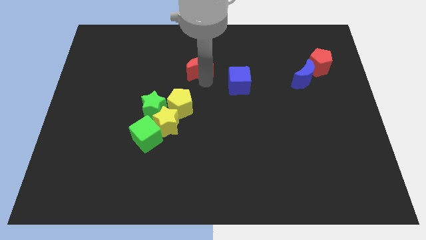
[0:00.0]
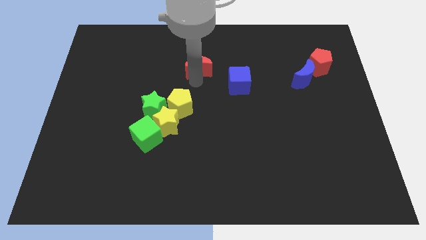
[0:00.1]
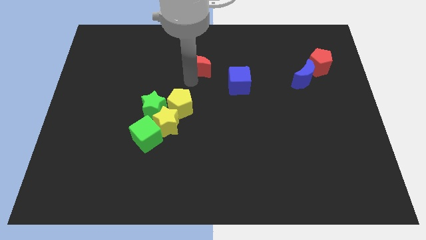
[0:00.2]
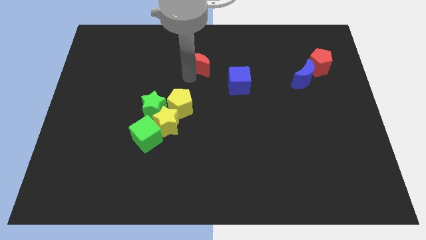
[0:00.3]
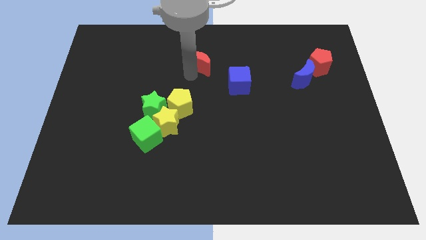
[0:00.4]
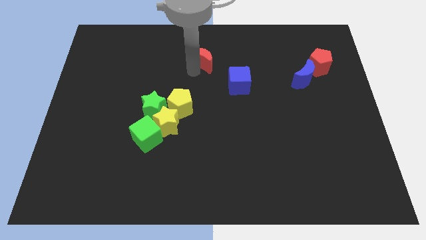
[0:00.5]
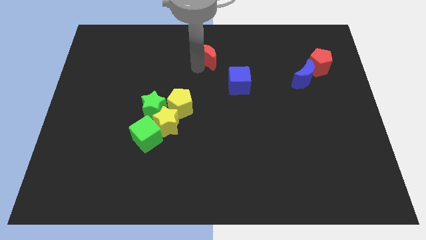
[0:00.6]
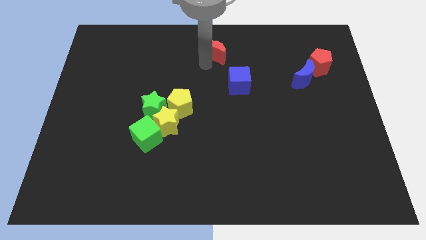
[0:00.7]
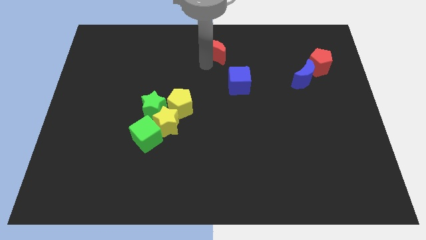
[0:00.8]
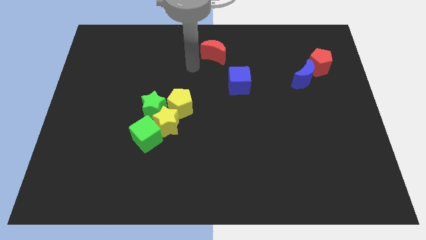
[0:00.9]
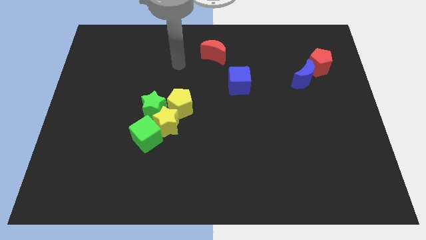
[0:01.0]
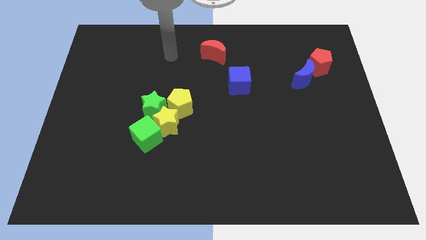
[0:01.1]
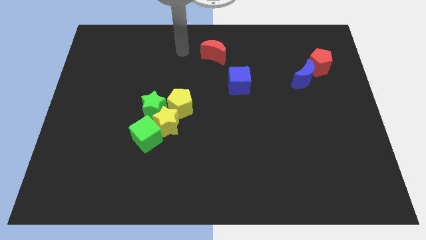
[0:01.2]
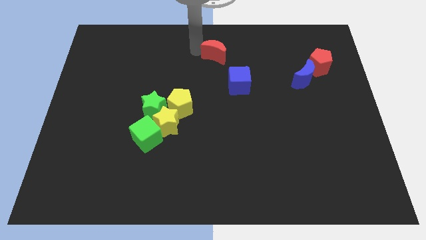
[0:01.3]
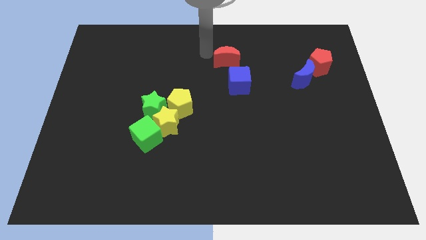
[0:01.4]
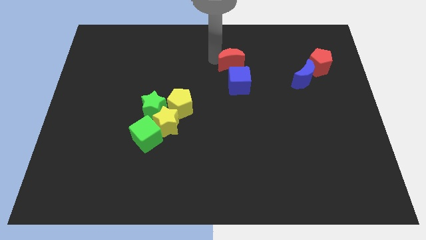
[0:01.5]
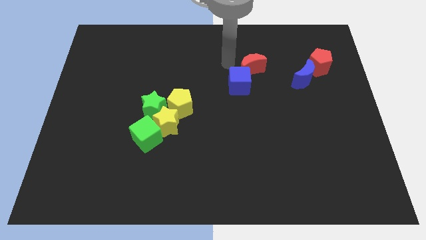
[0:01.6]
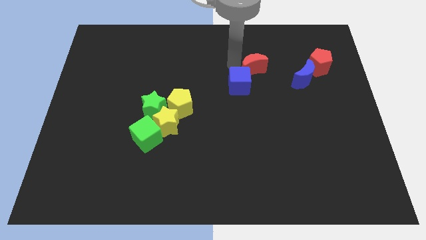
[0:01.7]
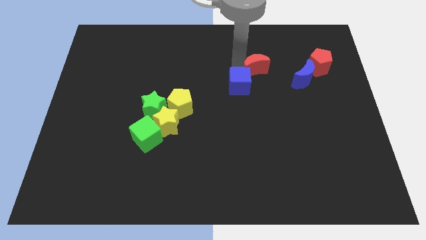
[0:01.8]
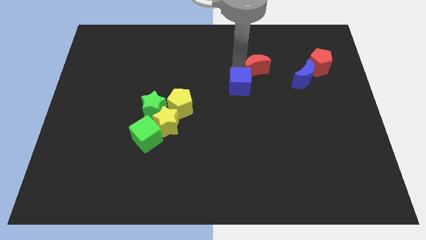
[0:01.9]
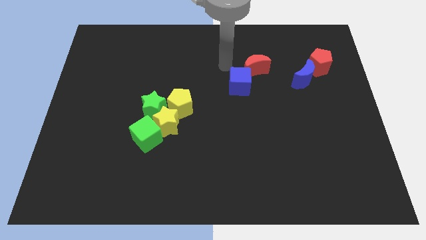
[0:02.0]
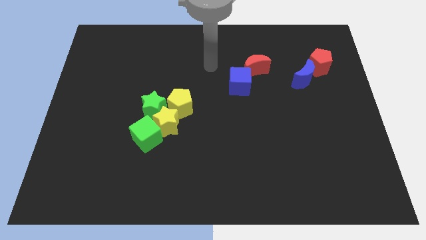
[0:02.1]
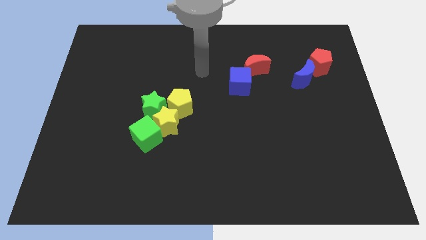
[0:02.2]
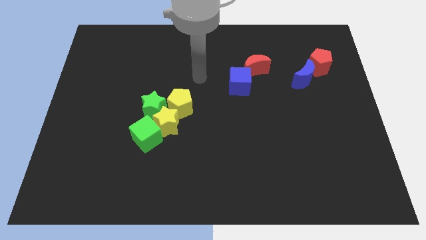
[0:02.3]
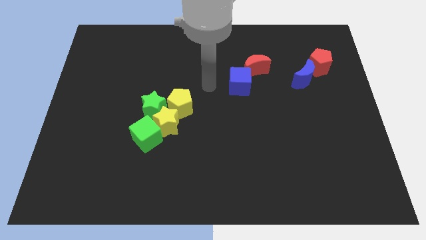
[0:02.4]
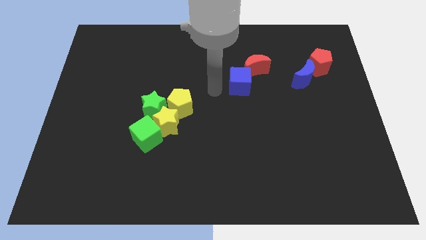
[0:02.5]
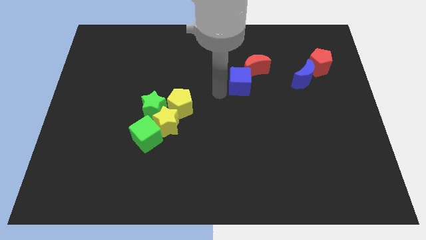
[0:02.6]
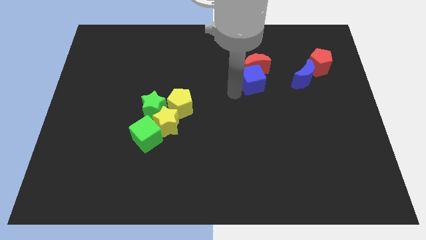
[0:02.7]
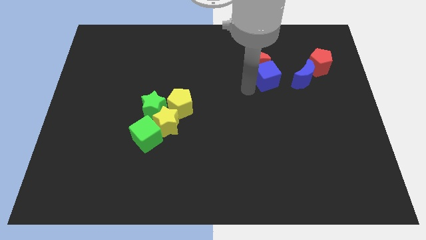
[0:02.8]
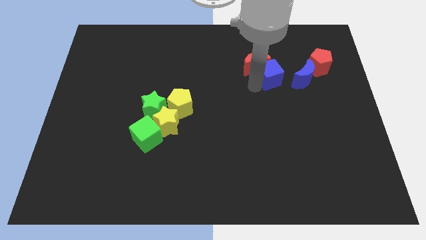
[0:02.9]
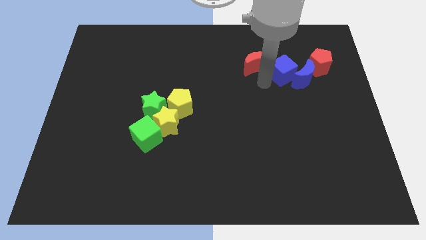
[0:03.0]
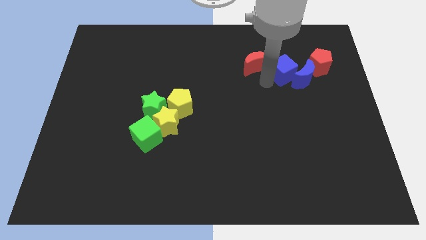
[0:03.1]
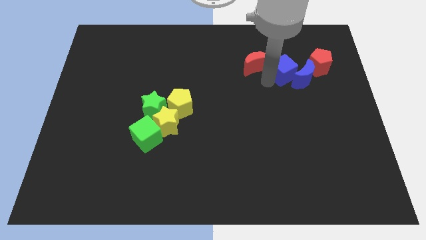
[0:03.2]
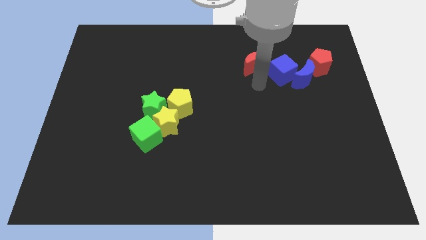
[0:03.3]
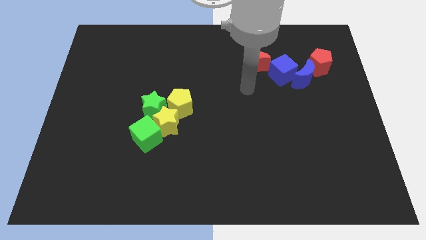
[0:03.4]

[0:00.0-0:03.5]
push the blue cube in between the blue crescent and red crescent

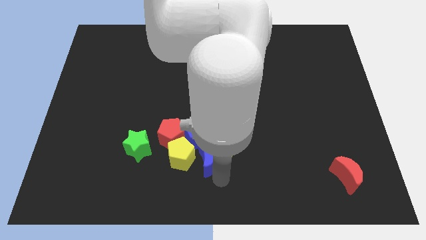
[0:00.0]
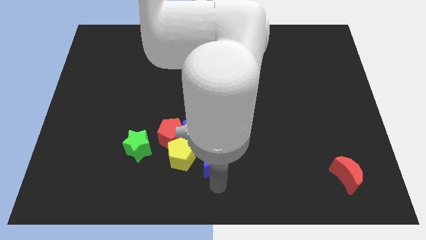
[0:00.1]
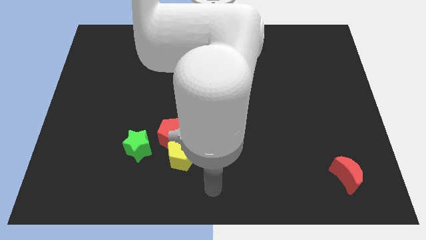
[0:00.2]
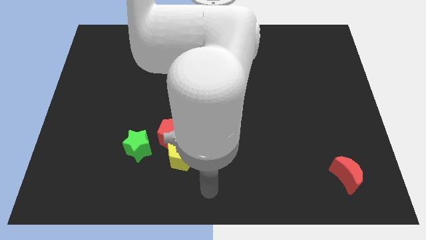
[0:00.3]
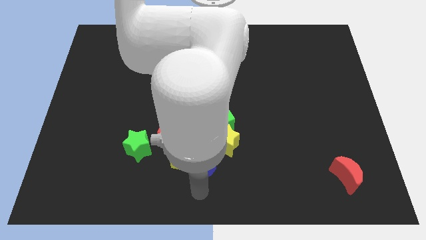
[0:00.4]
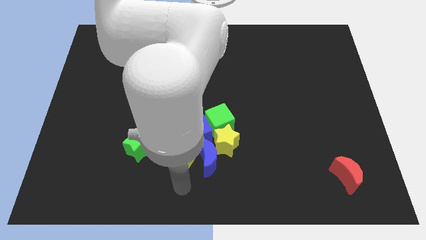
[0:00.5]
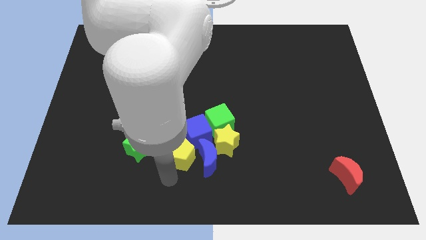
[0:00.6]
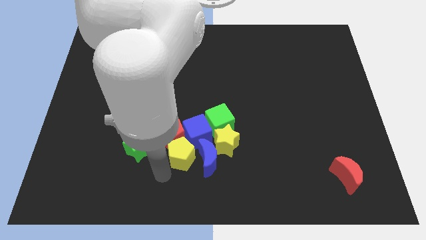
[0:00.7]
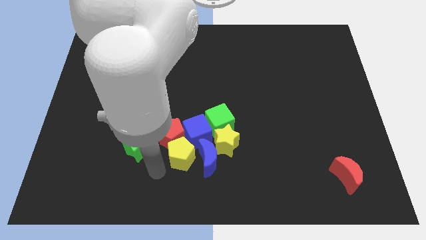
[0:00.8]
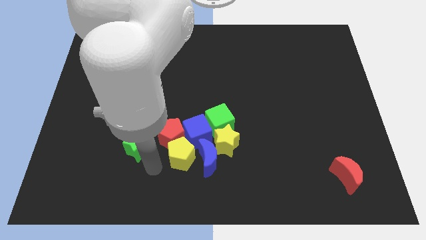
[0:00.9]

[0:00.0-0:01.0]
move the arm away from the blue moon

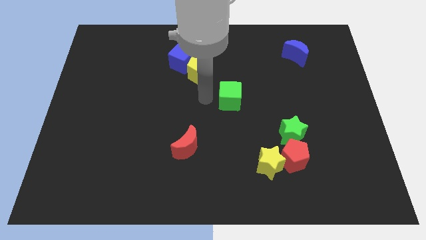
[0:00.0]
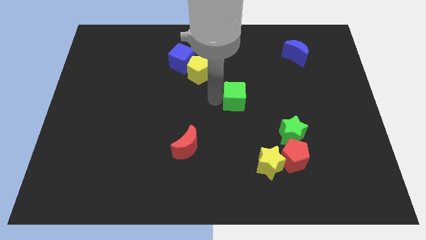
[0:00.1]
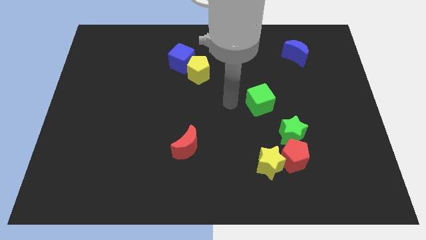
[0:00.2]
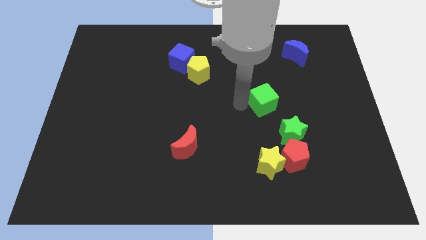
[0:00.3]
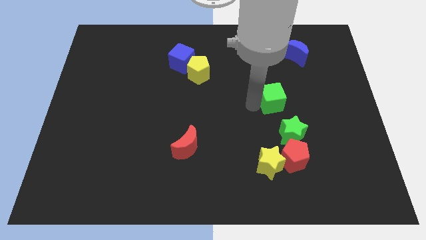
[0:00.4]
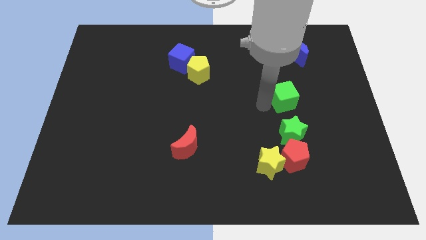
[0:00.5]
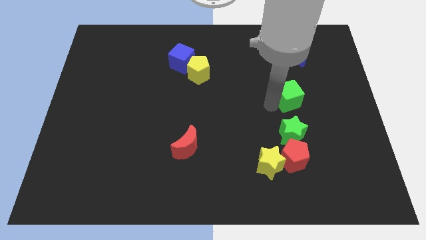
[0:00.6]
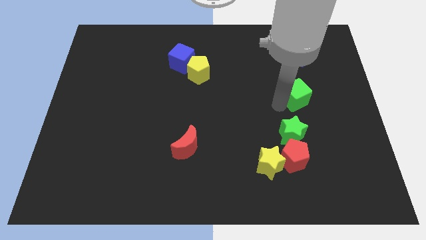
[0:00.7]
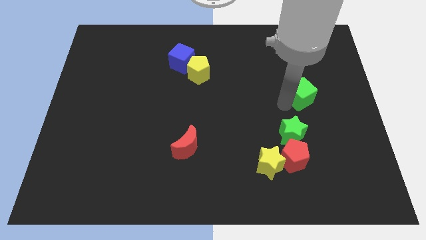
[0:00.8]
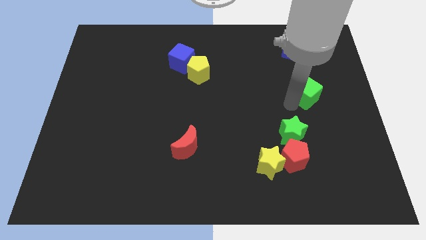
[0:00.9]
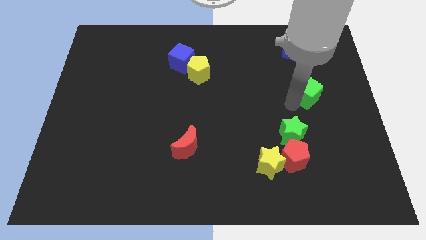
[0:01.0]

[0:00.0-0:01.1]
move the green cube above the green star

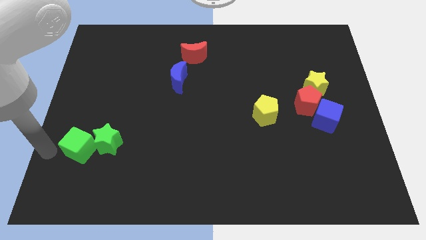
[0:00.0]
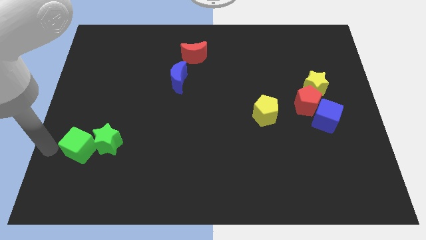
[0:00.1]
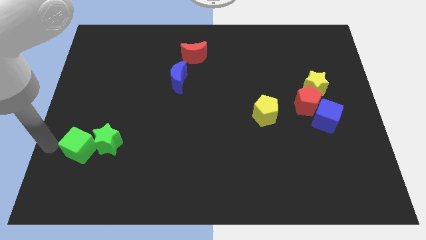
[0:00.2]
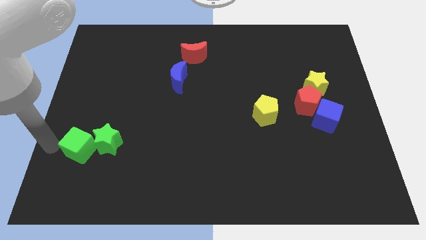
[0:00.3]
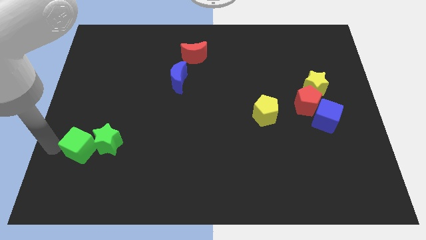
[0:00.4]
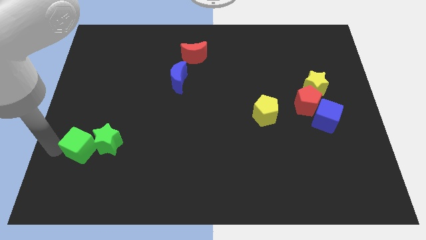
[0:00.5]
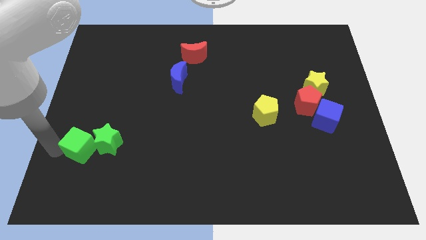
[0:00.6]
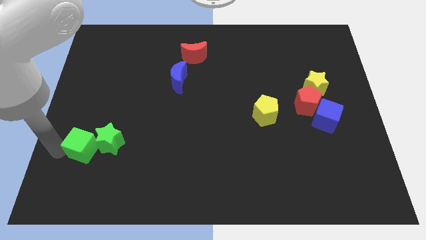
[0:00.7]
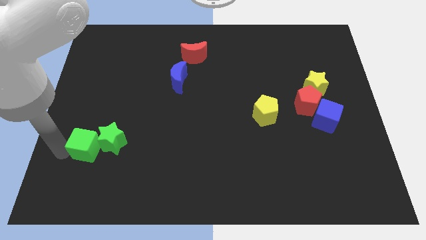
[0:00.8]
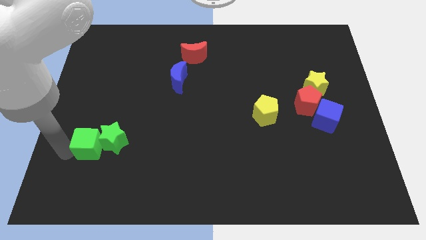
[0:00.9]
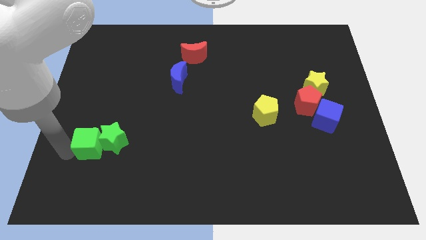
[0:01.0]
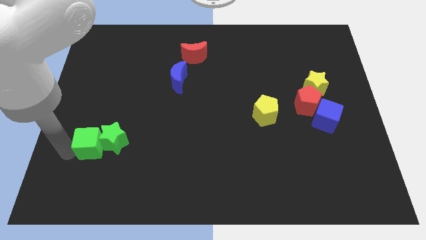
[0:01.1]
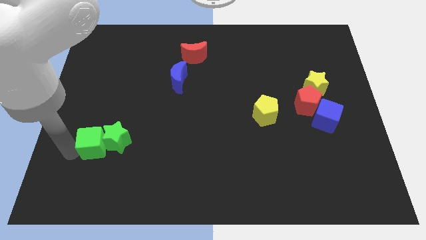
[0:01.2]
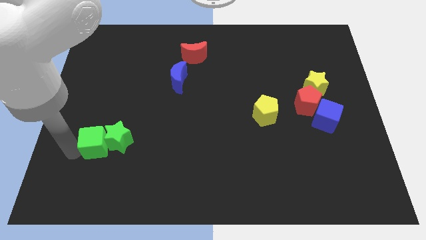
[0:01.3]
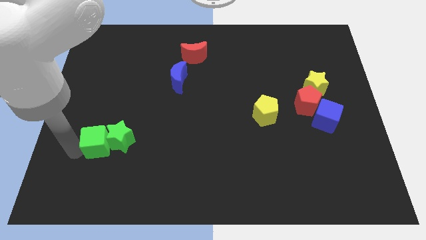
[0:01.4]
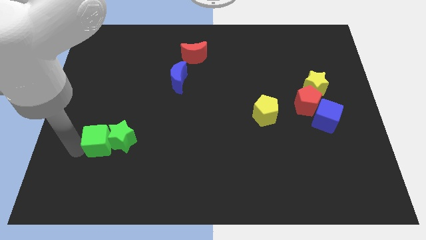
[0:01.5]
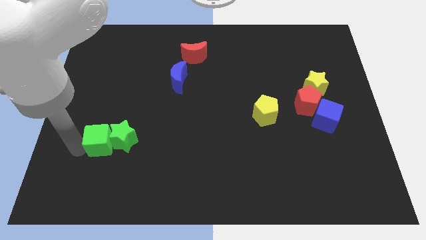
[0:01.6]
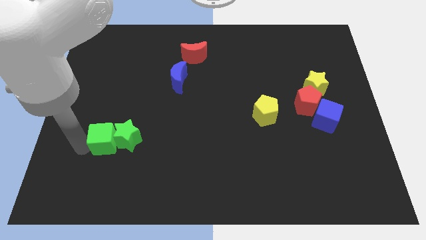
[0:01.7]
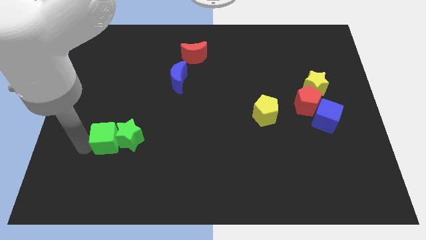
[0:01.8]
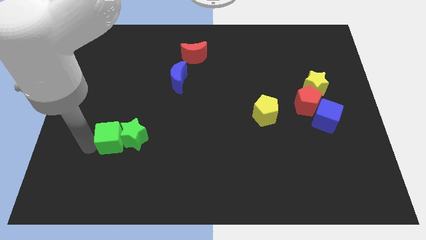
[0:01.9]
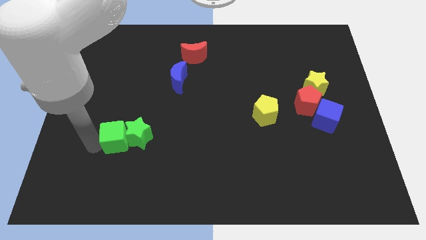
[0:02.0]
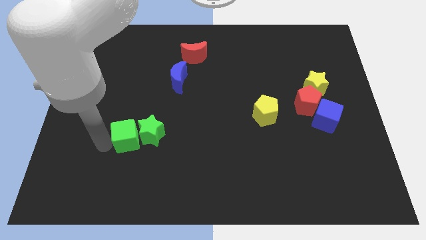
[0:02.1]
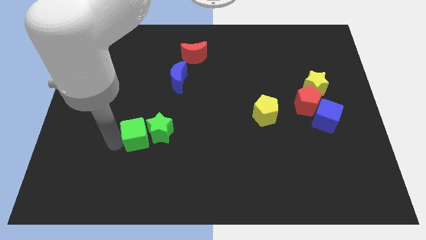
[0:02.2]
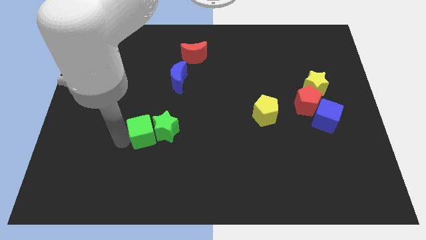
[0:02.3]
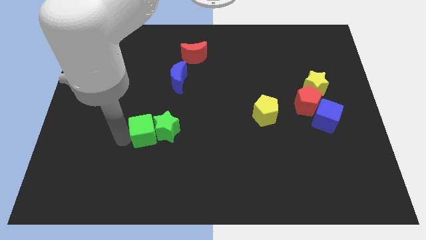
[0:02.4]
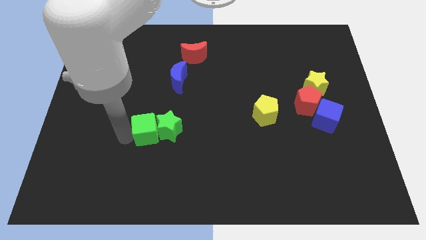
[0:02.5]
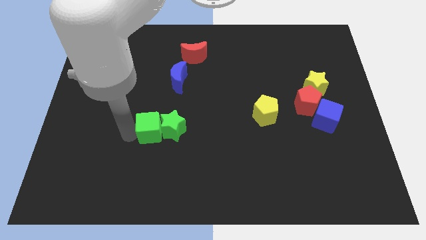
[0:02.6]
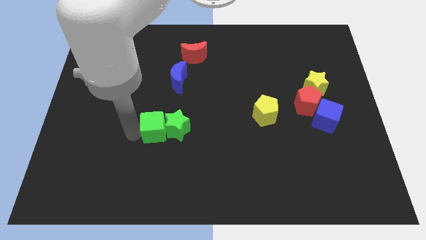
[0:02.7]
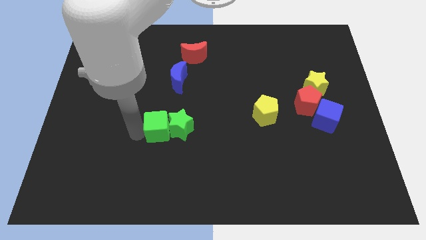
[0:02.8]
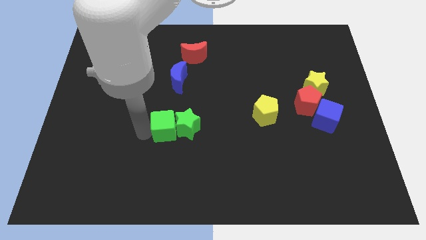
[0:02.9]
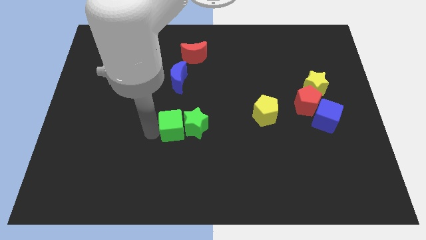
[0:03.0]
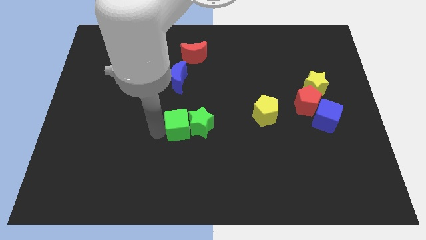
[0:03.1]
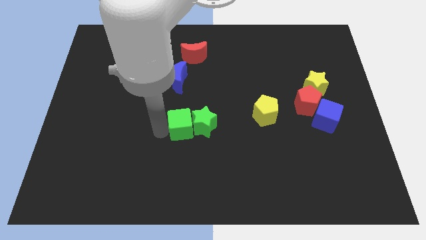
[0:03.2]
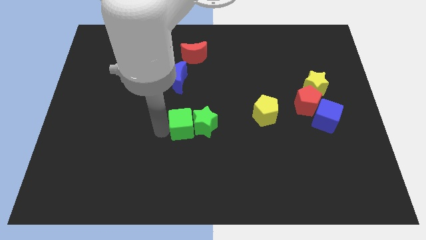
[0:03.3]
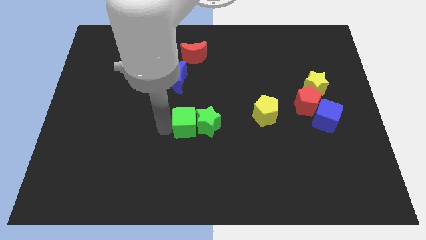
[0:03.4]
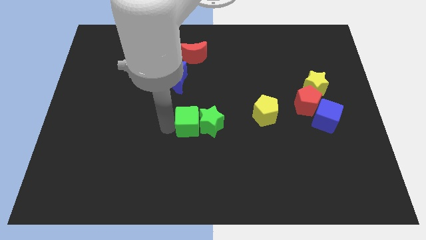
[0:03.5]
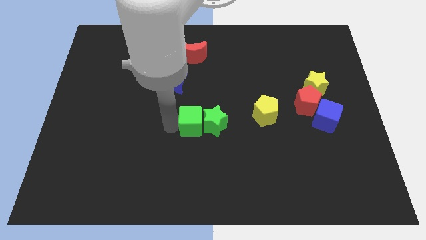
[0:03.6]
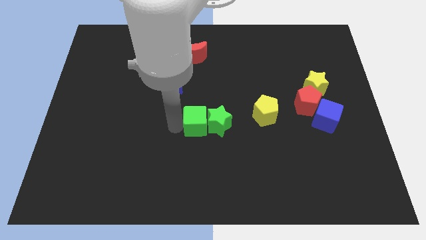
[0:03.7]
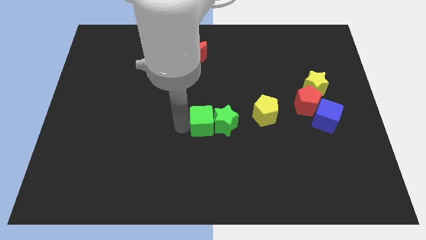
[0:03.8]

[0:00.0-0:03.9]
move the green blocks towards the centre of the board
